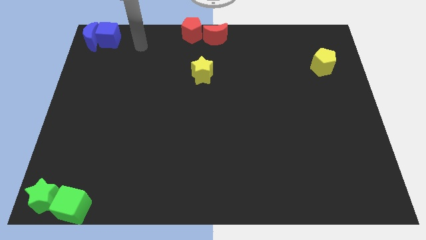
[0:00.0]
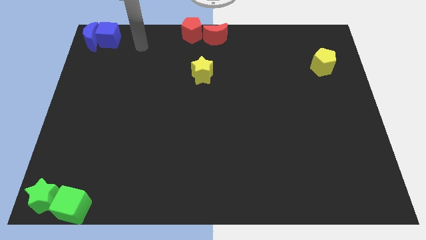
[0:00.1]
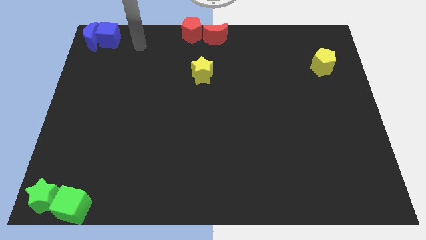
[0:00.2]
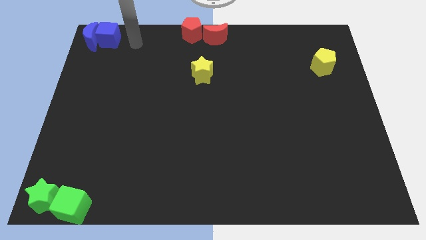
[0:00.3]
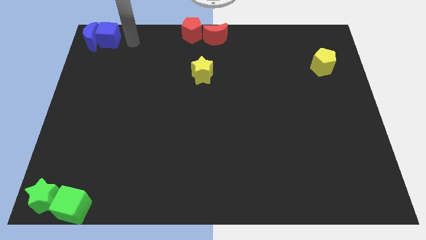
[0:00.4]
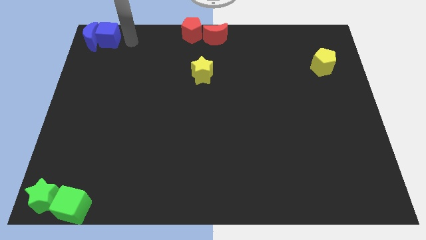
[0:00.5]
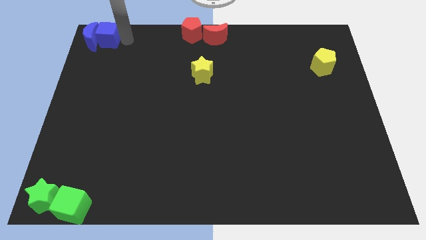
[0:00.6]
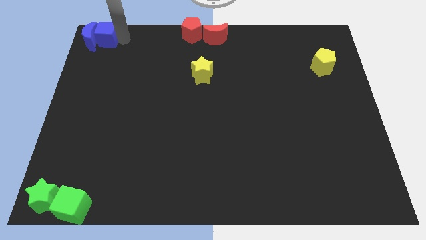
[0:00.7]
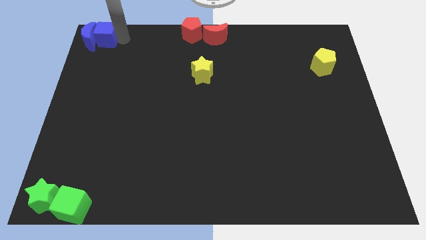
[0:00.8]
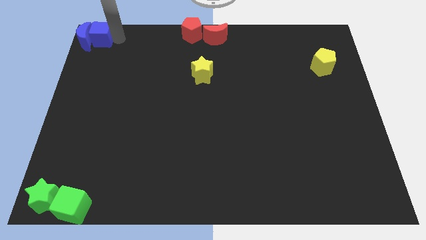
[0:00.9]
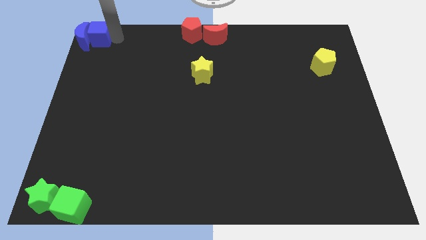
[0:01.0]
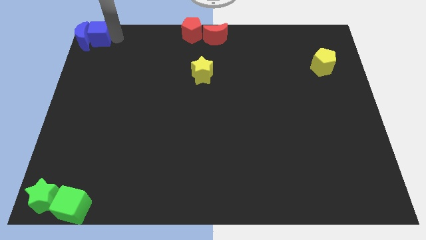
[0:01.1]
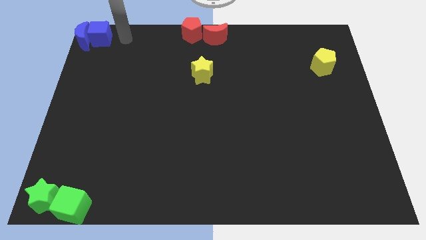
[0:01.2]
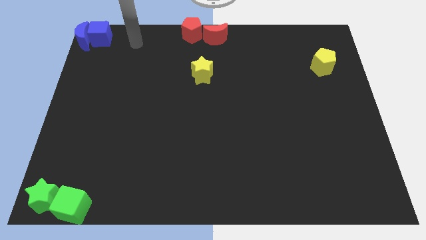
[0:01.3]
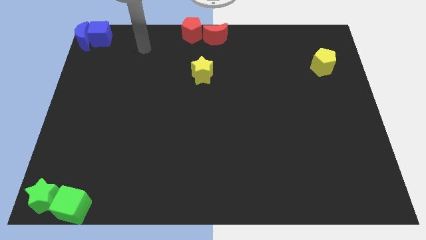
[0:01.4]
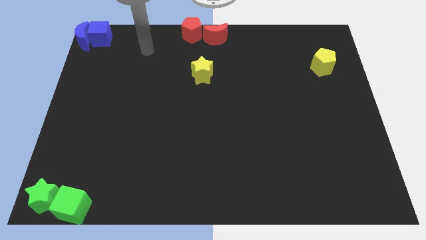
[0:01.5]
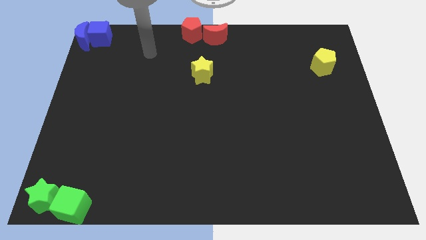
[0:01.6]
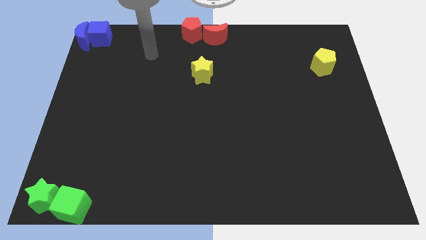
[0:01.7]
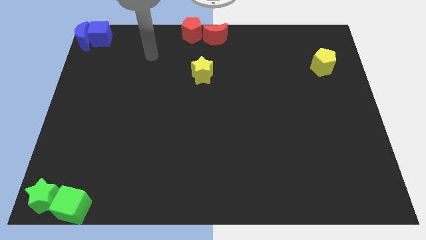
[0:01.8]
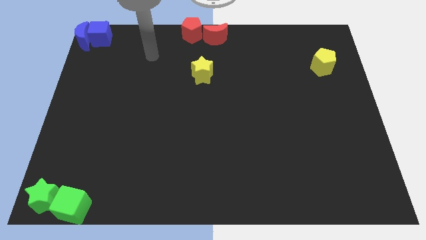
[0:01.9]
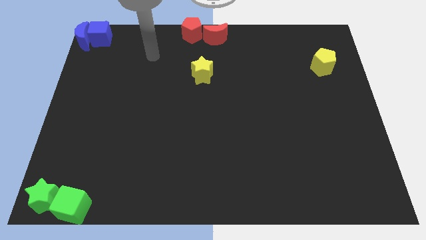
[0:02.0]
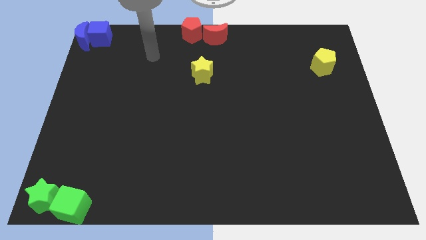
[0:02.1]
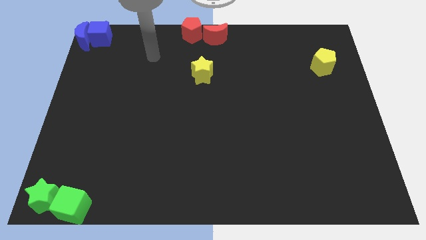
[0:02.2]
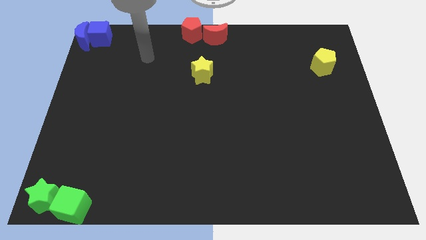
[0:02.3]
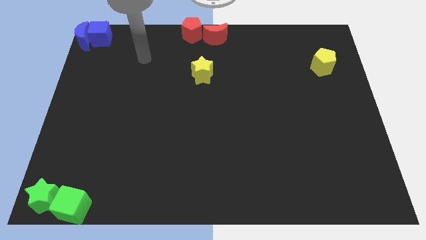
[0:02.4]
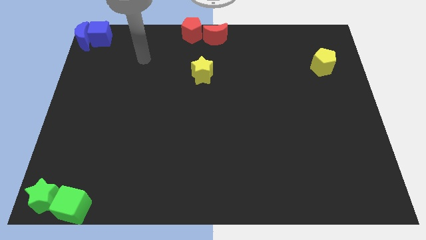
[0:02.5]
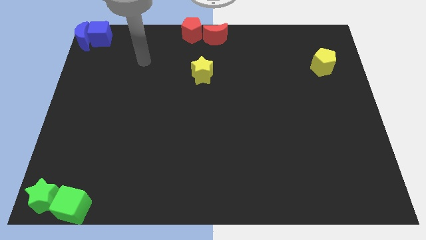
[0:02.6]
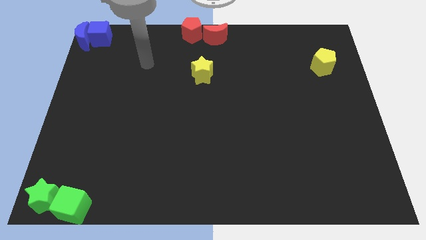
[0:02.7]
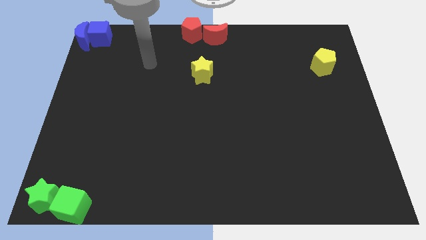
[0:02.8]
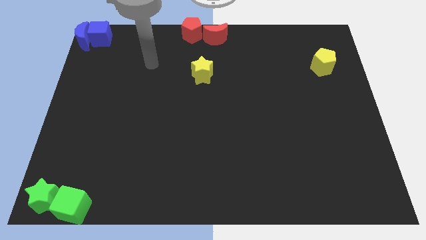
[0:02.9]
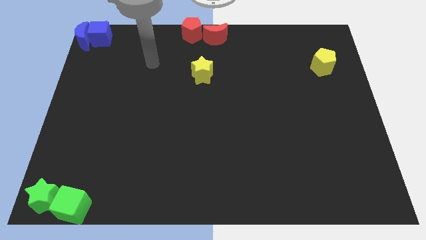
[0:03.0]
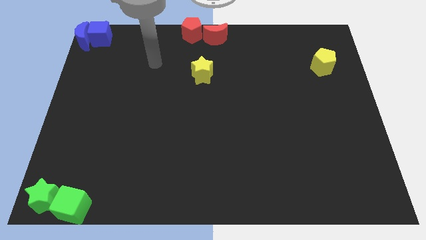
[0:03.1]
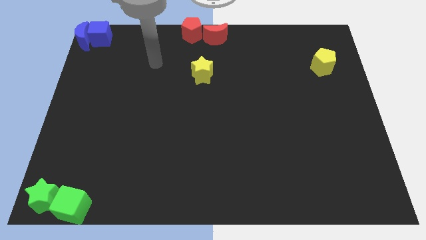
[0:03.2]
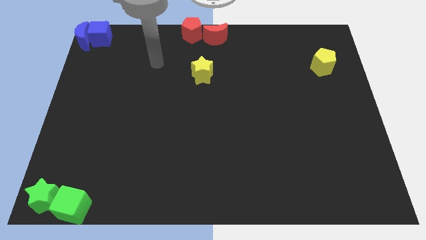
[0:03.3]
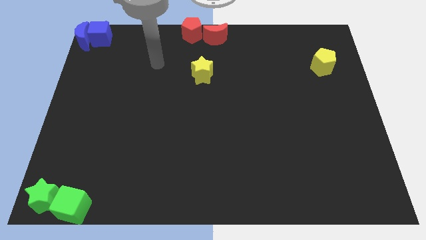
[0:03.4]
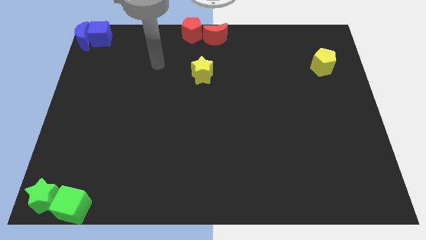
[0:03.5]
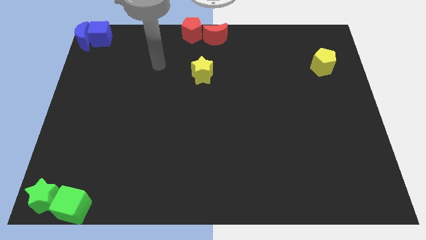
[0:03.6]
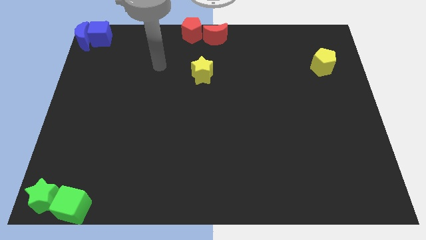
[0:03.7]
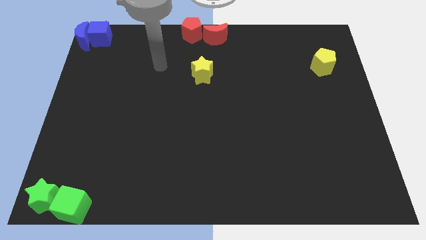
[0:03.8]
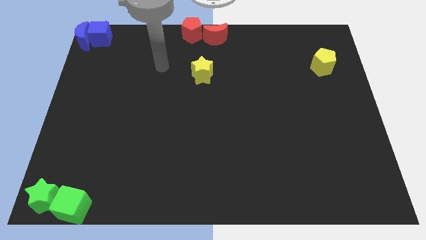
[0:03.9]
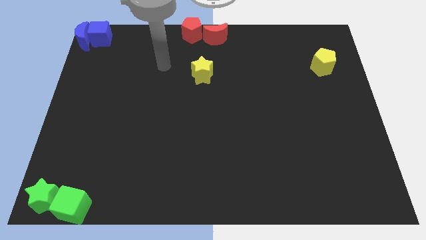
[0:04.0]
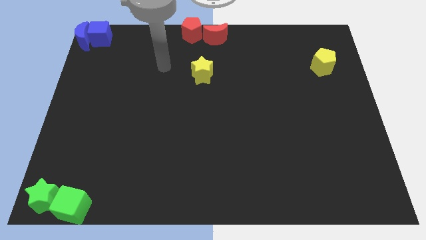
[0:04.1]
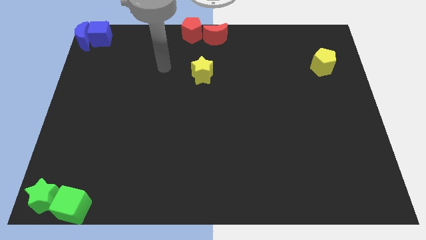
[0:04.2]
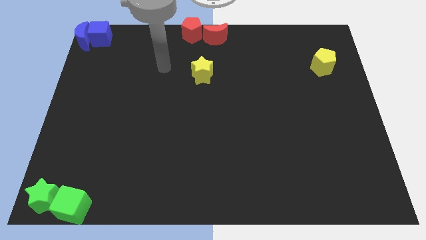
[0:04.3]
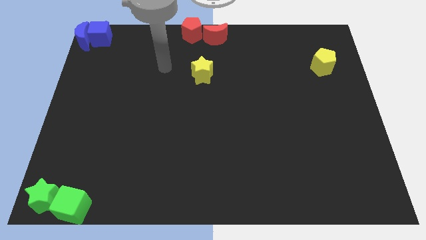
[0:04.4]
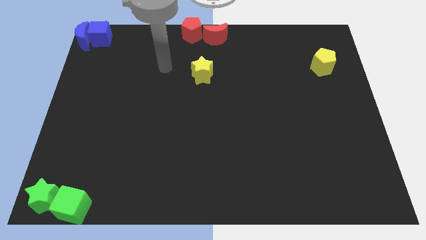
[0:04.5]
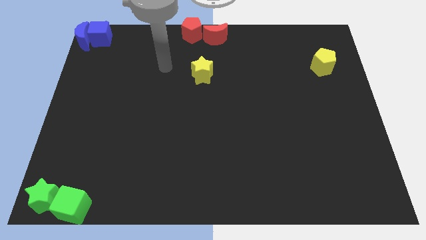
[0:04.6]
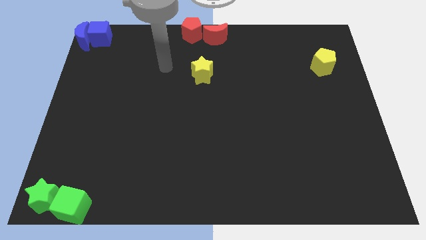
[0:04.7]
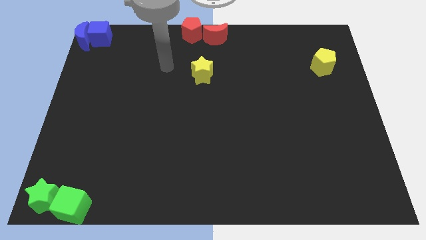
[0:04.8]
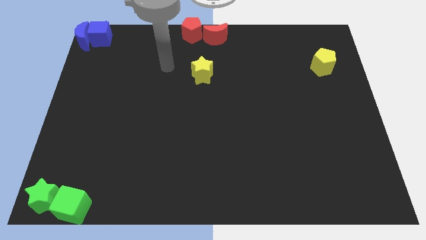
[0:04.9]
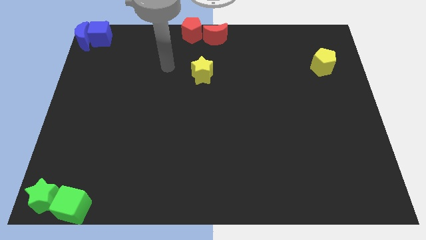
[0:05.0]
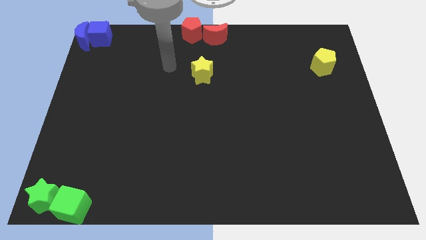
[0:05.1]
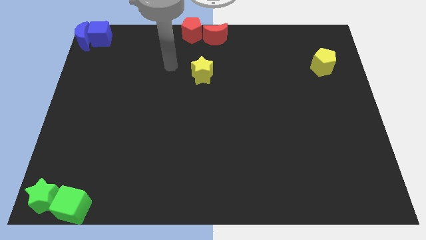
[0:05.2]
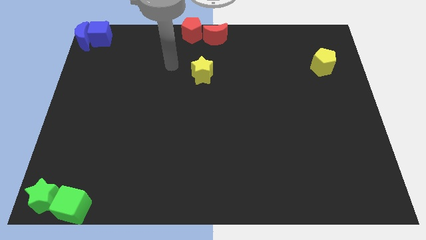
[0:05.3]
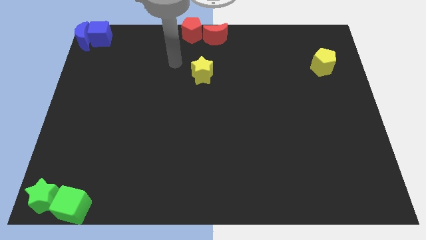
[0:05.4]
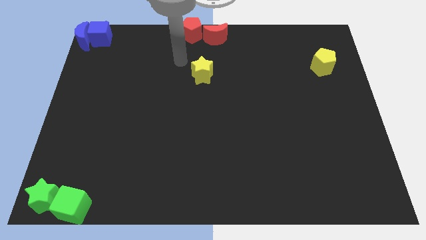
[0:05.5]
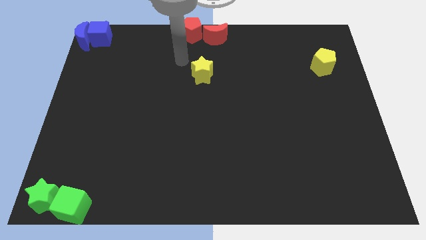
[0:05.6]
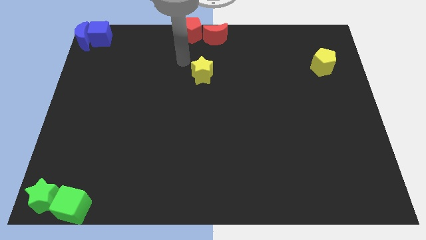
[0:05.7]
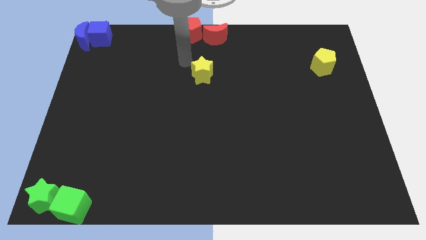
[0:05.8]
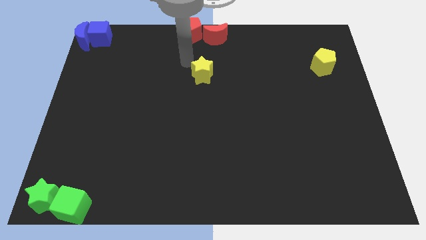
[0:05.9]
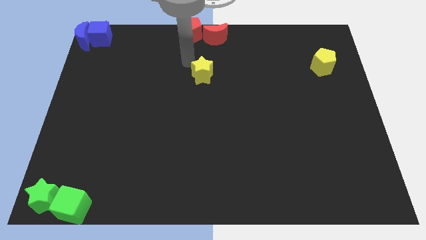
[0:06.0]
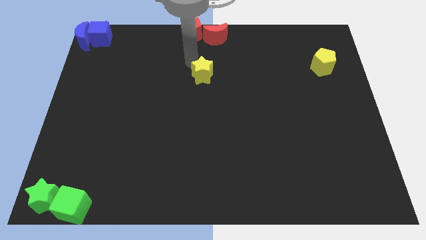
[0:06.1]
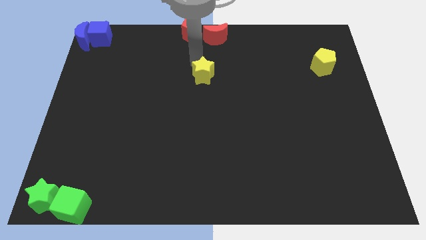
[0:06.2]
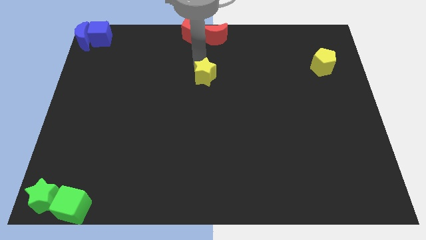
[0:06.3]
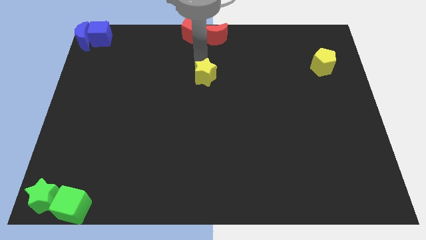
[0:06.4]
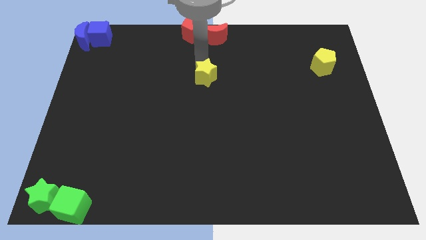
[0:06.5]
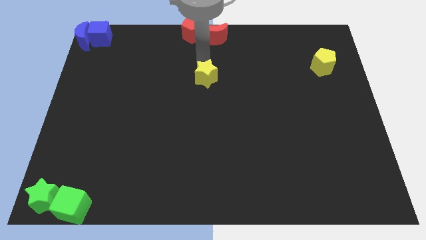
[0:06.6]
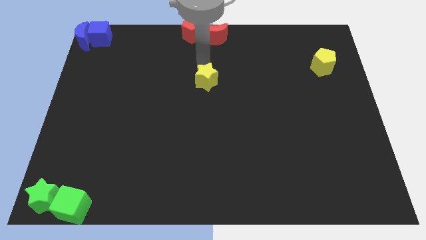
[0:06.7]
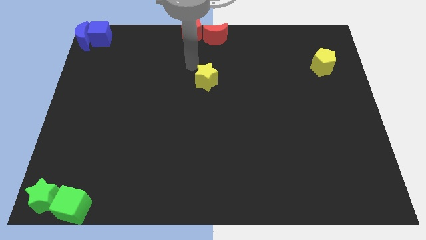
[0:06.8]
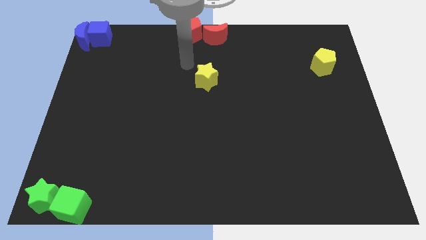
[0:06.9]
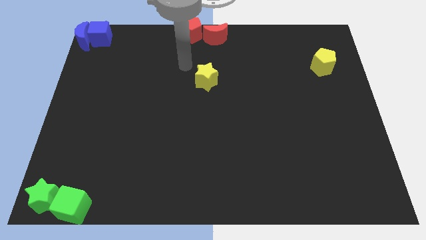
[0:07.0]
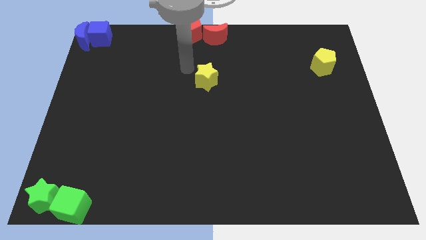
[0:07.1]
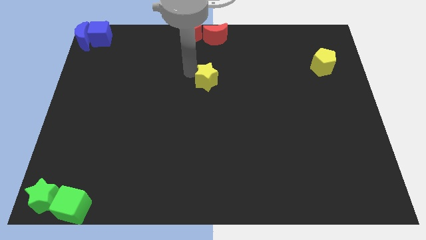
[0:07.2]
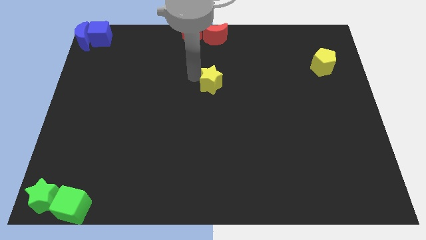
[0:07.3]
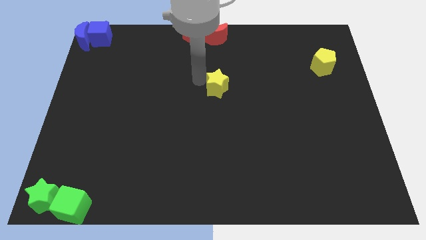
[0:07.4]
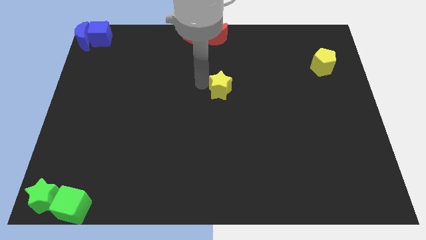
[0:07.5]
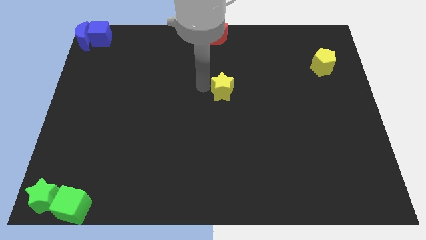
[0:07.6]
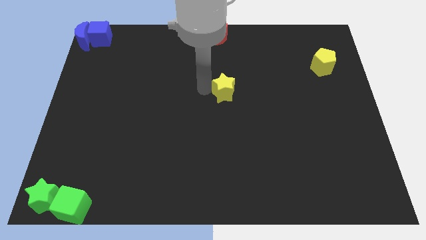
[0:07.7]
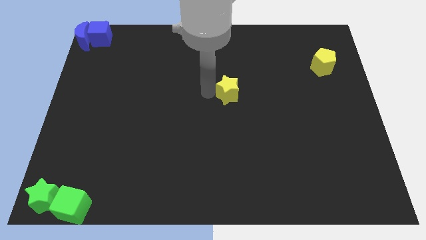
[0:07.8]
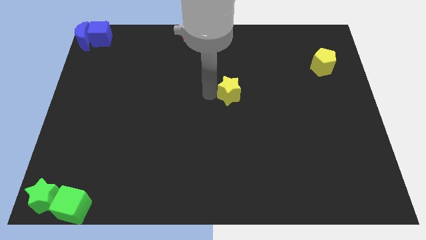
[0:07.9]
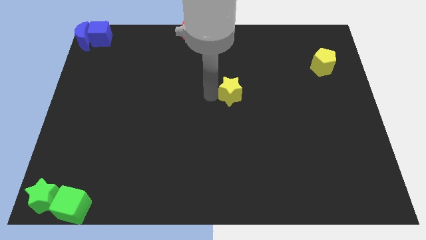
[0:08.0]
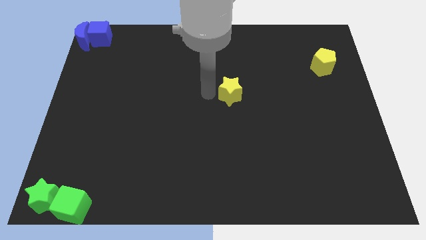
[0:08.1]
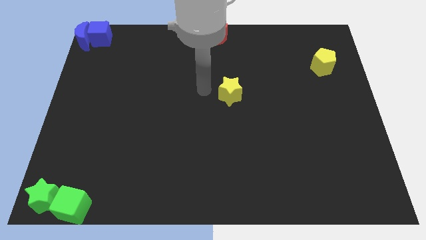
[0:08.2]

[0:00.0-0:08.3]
move the yellow star slightly to the bottom

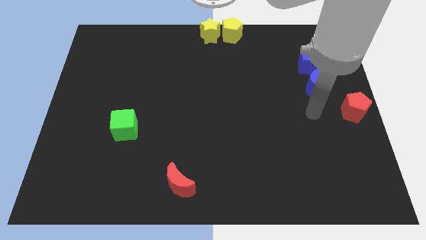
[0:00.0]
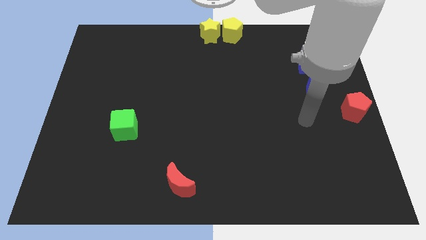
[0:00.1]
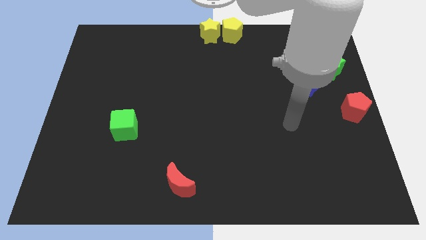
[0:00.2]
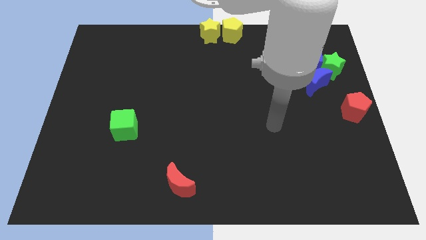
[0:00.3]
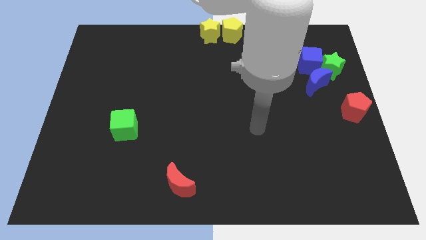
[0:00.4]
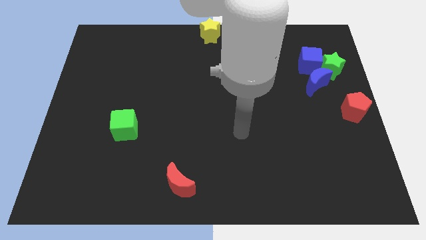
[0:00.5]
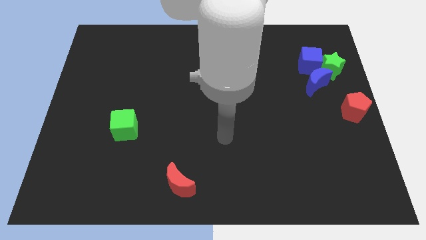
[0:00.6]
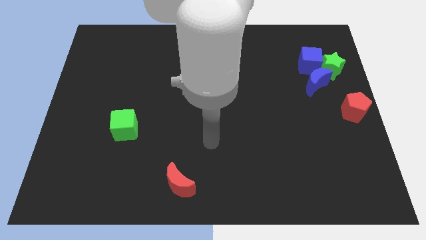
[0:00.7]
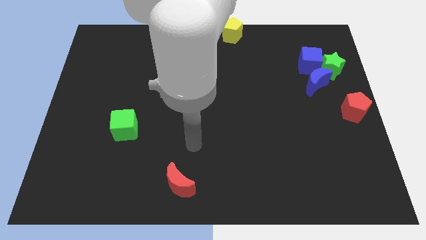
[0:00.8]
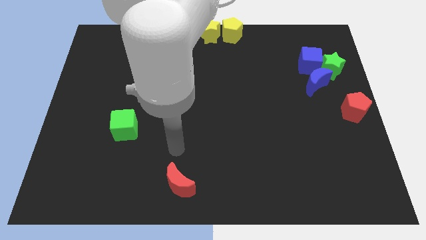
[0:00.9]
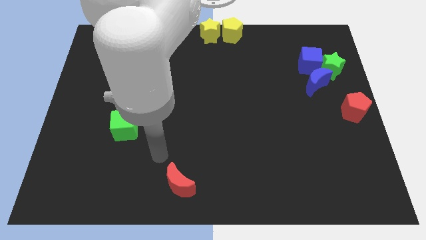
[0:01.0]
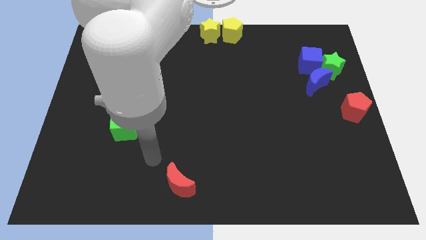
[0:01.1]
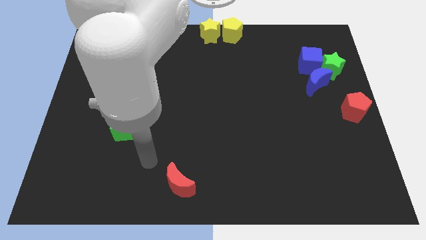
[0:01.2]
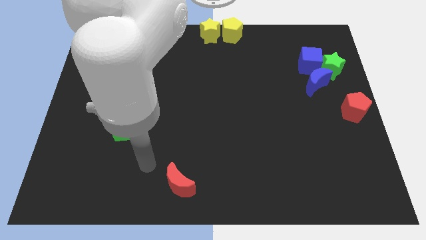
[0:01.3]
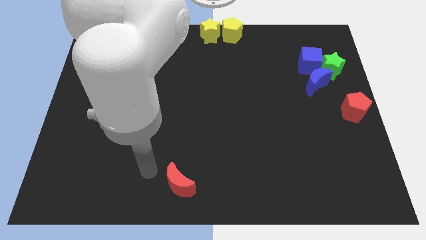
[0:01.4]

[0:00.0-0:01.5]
move your arm towards the bottom left corner of the board
